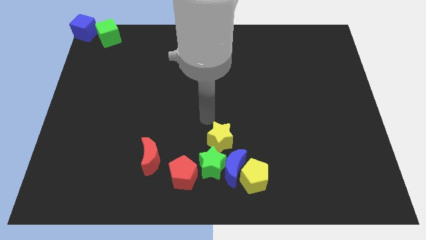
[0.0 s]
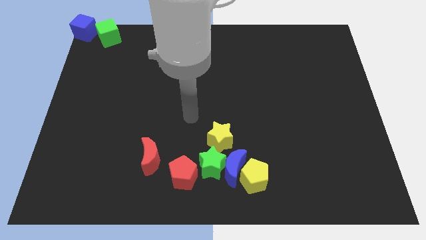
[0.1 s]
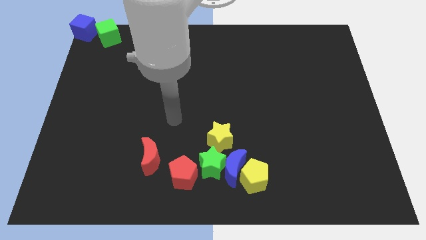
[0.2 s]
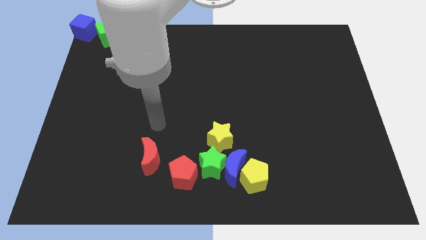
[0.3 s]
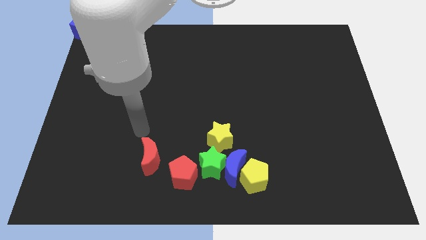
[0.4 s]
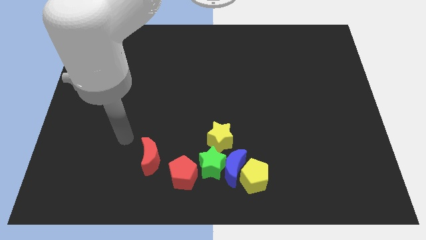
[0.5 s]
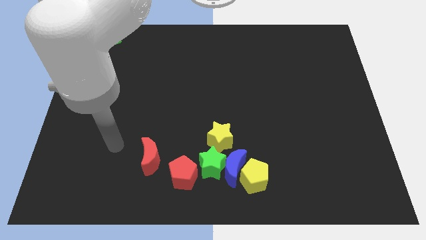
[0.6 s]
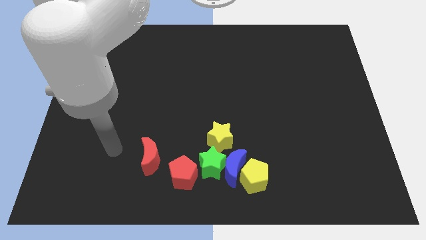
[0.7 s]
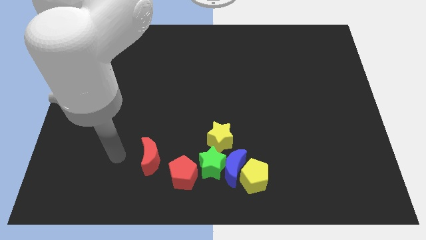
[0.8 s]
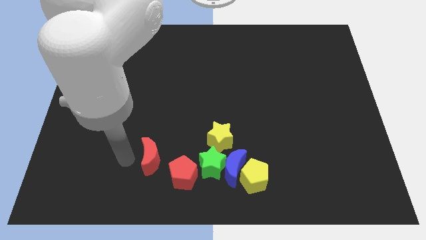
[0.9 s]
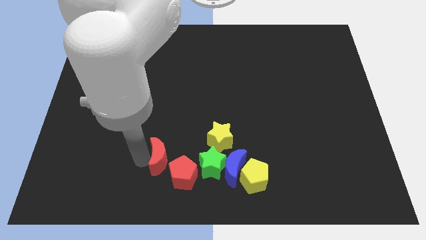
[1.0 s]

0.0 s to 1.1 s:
move your arm away from yellow star

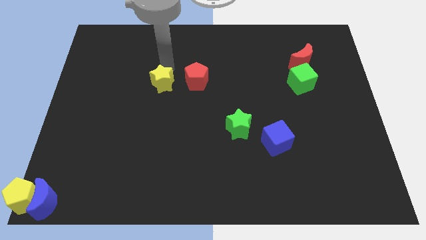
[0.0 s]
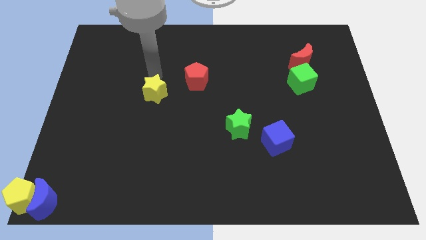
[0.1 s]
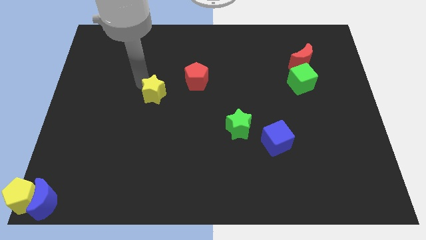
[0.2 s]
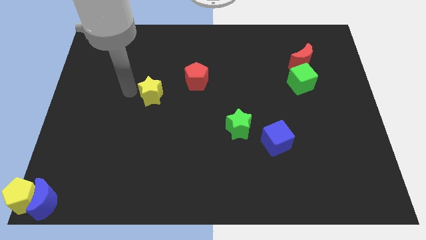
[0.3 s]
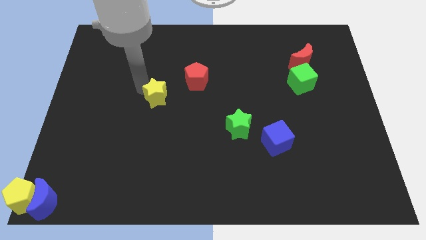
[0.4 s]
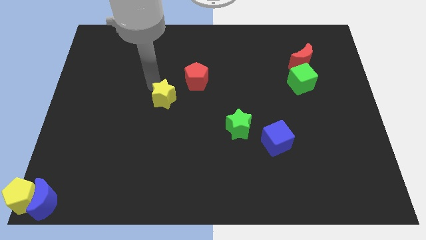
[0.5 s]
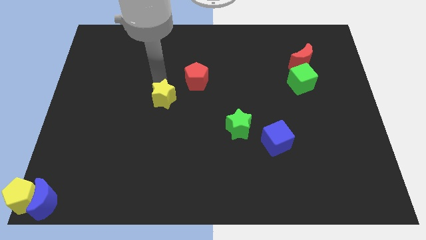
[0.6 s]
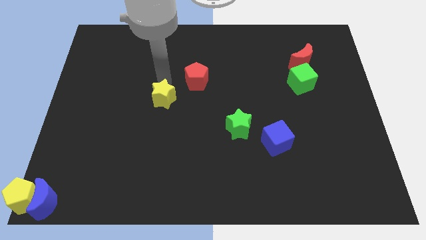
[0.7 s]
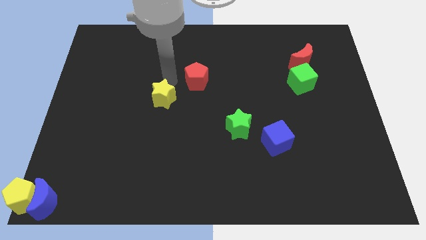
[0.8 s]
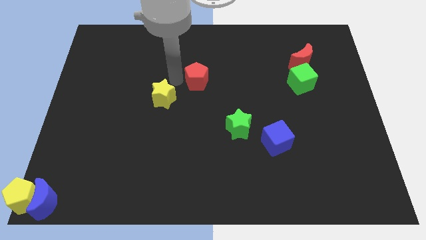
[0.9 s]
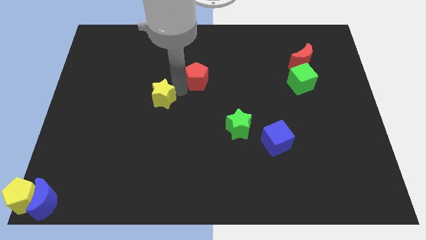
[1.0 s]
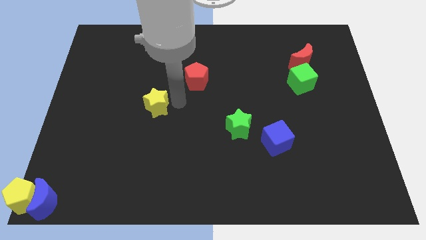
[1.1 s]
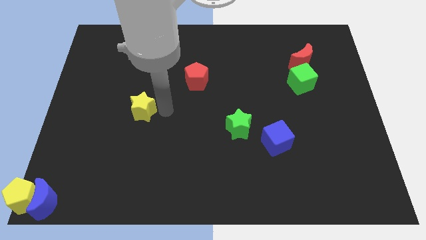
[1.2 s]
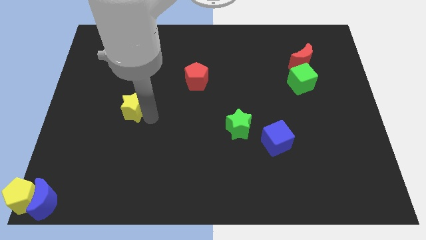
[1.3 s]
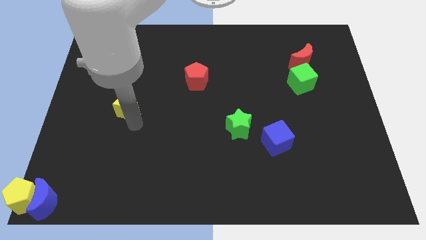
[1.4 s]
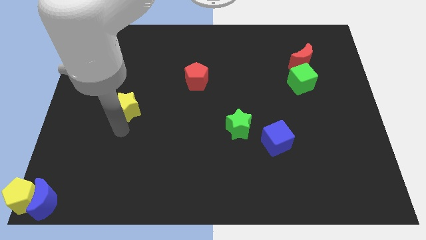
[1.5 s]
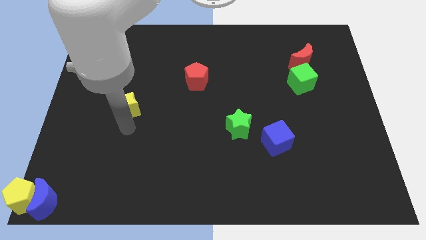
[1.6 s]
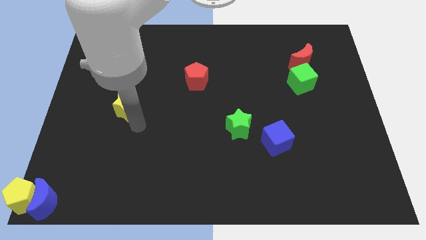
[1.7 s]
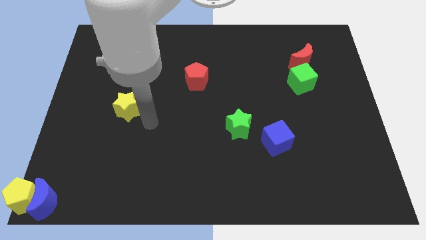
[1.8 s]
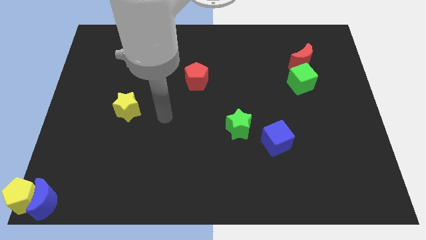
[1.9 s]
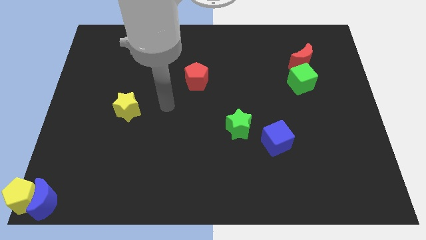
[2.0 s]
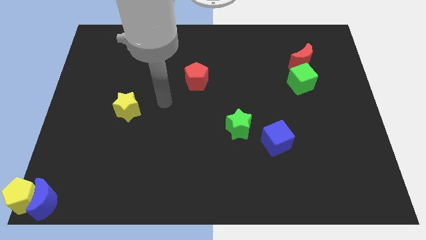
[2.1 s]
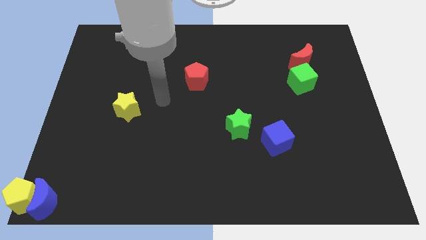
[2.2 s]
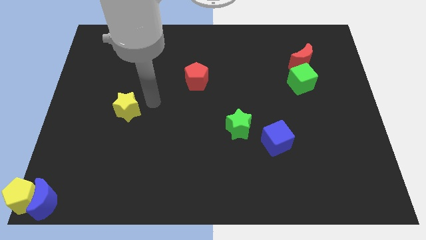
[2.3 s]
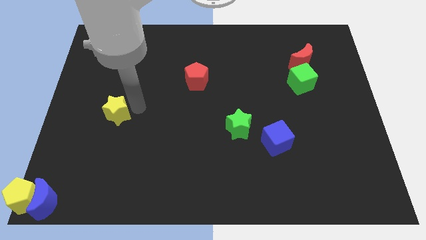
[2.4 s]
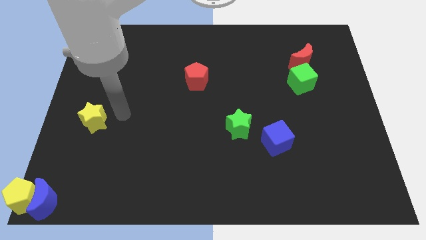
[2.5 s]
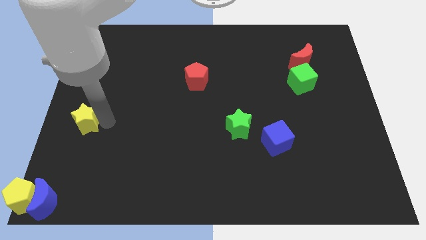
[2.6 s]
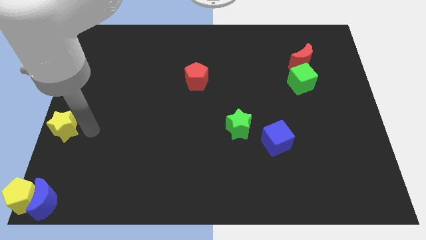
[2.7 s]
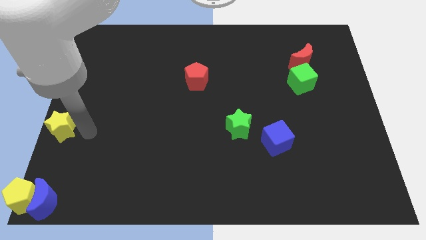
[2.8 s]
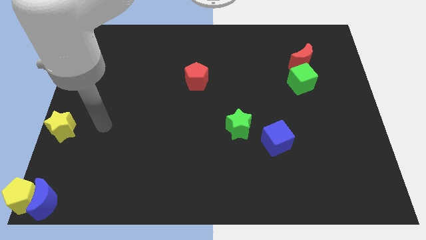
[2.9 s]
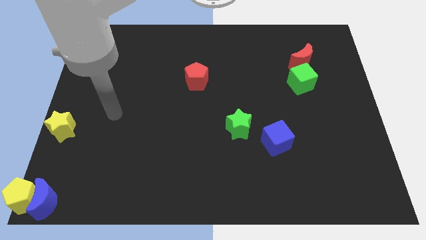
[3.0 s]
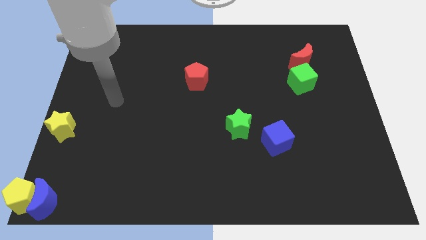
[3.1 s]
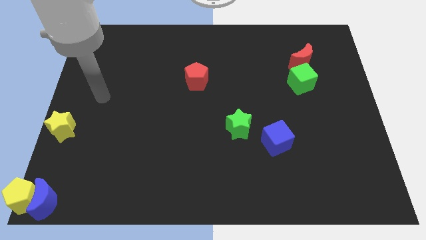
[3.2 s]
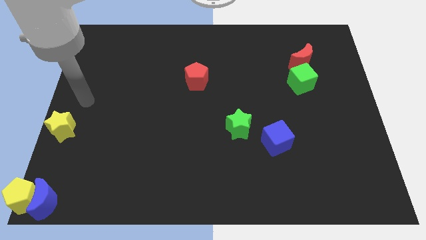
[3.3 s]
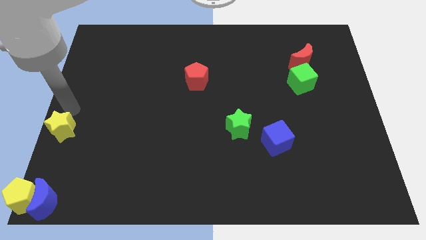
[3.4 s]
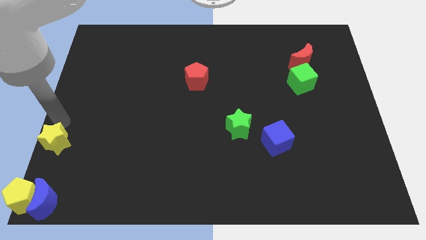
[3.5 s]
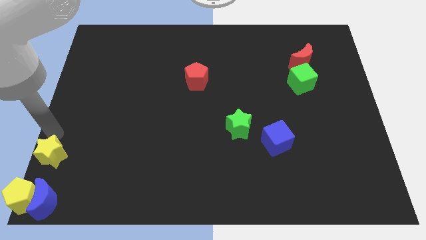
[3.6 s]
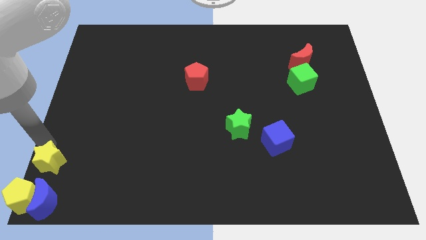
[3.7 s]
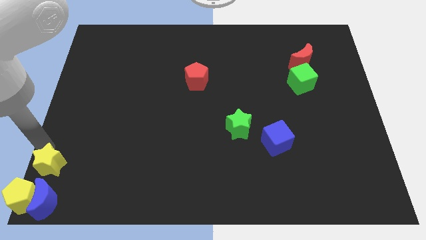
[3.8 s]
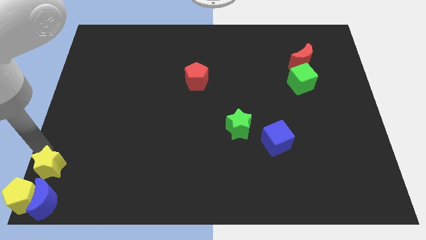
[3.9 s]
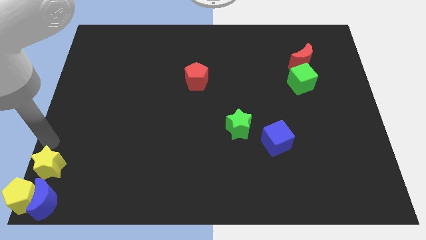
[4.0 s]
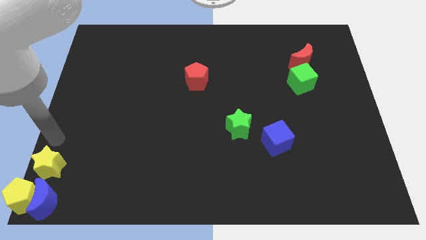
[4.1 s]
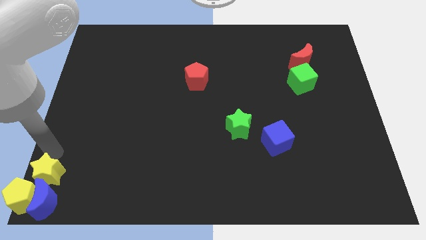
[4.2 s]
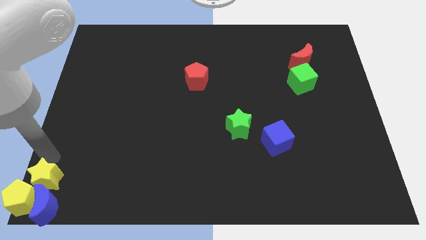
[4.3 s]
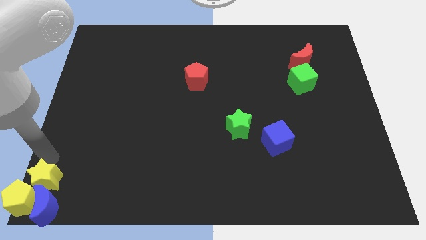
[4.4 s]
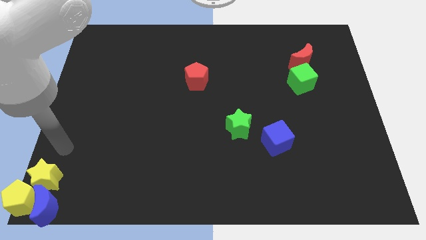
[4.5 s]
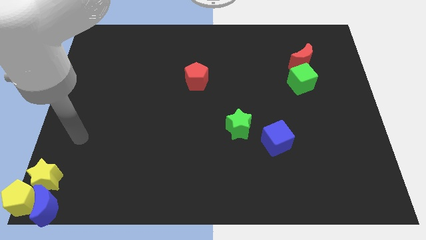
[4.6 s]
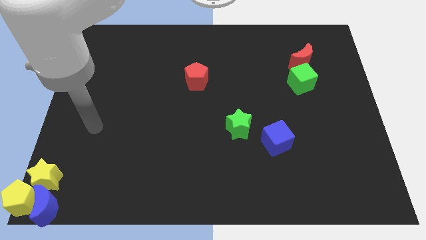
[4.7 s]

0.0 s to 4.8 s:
move the yellow star into the blue crescent

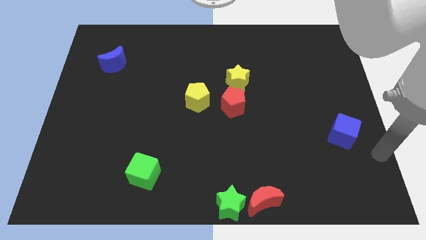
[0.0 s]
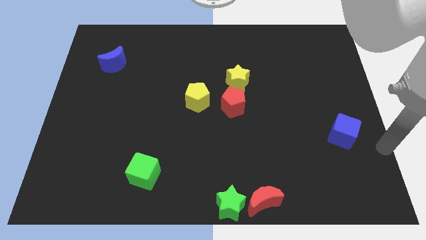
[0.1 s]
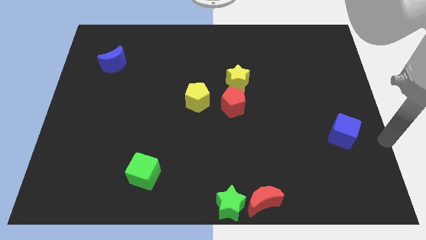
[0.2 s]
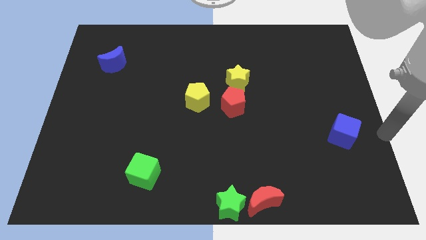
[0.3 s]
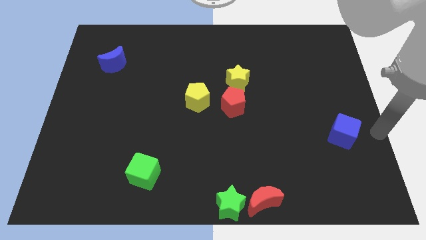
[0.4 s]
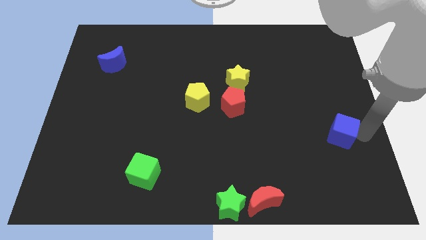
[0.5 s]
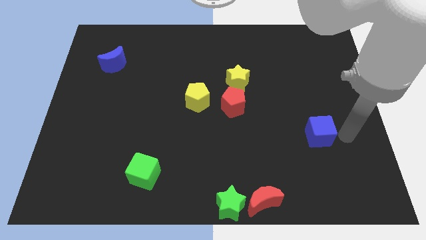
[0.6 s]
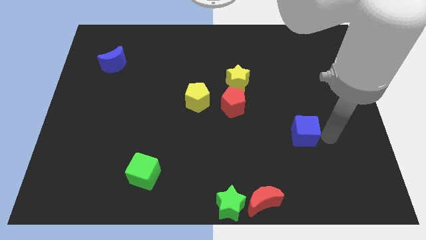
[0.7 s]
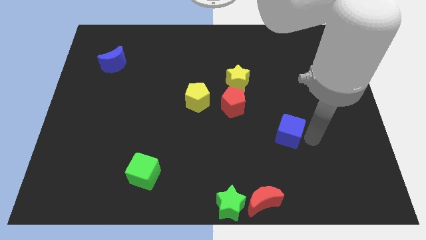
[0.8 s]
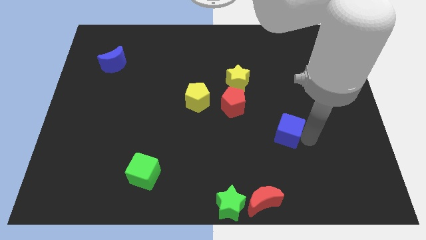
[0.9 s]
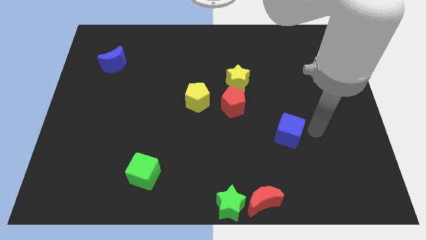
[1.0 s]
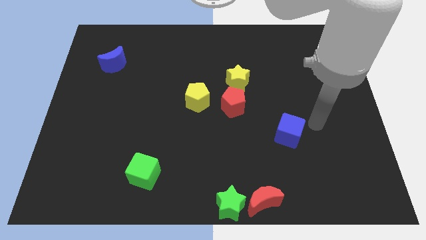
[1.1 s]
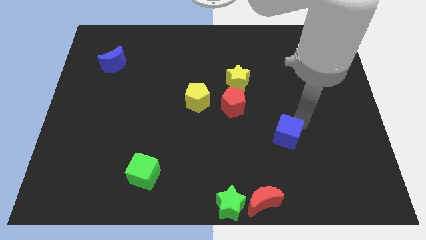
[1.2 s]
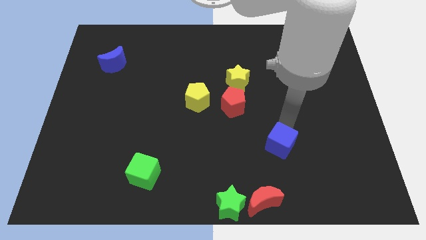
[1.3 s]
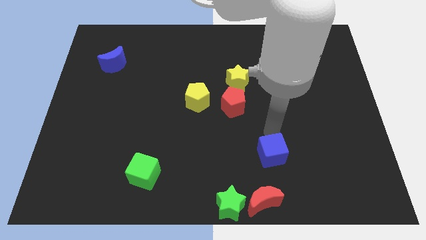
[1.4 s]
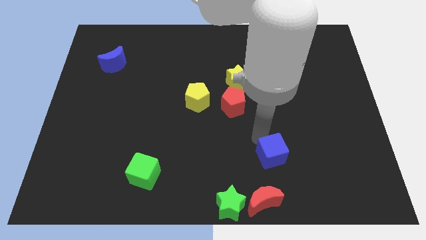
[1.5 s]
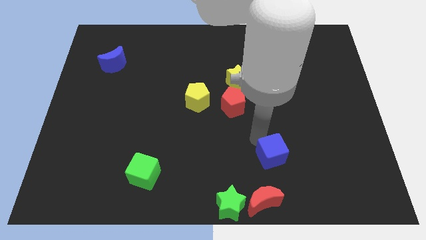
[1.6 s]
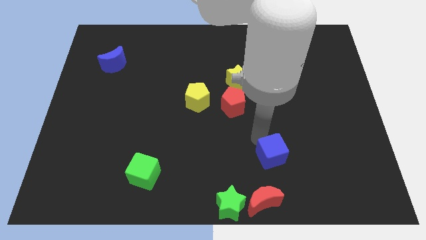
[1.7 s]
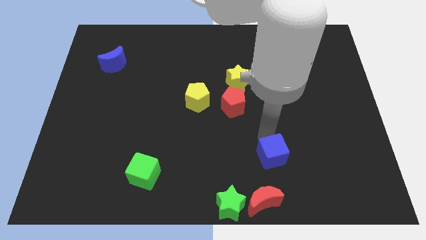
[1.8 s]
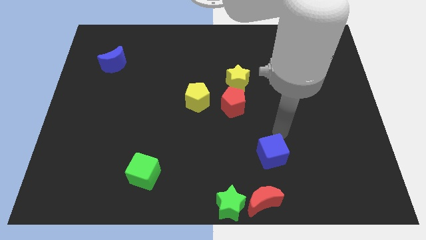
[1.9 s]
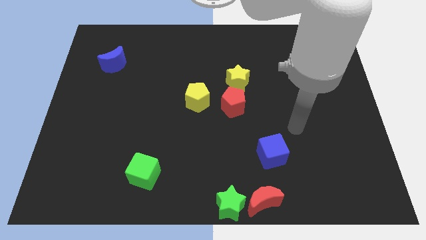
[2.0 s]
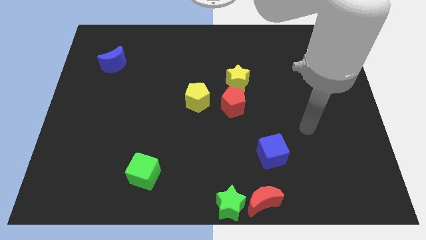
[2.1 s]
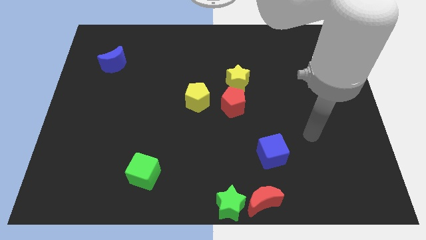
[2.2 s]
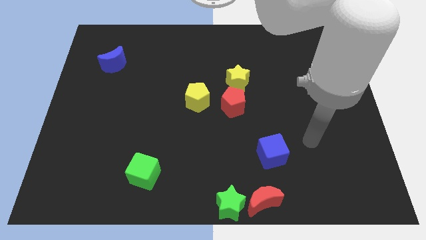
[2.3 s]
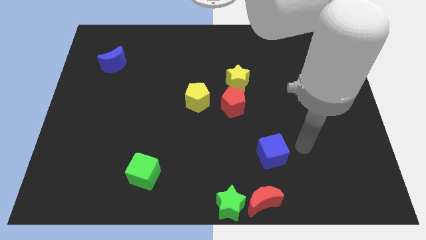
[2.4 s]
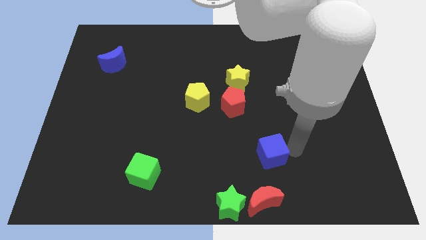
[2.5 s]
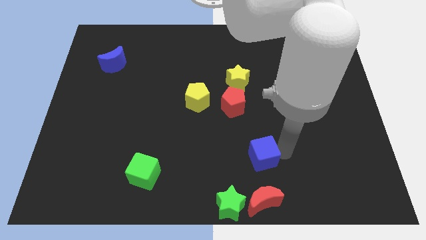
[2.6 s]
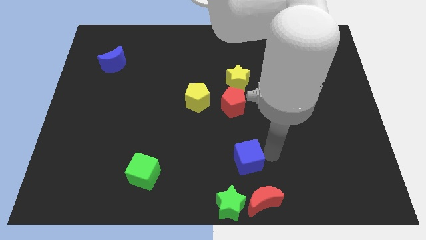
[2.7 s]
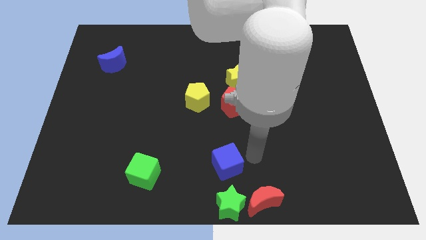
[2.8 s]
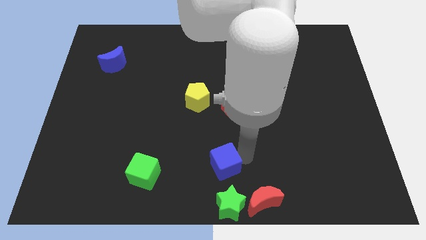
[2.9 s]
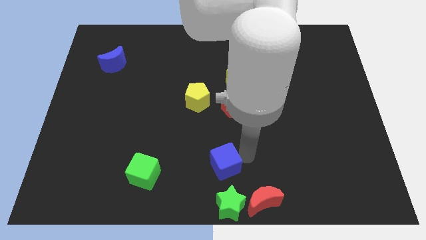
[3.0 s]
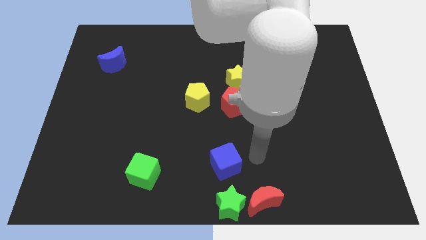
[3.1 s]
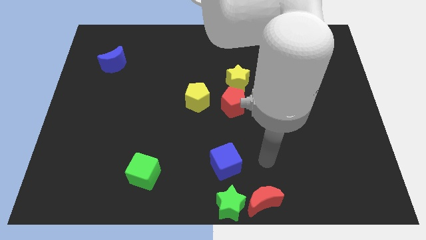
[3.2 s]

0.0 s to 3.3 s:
push the blue cube to the top of the green star
